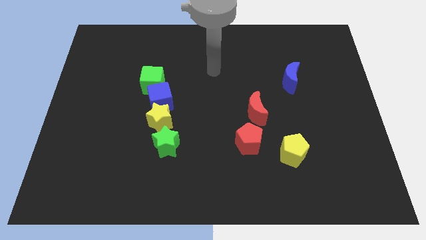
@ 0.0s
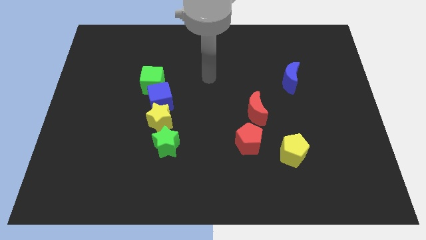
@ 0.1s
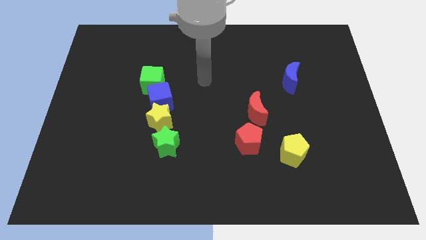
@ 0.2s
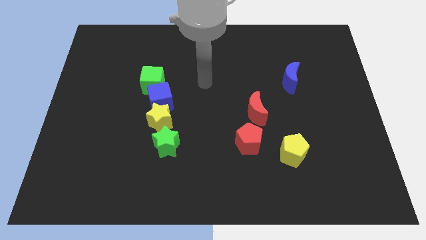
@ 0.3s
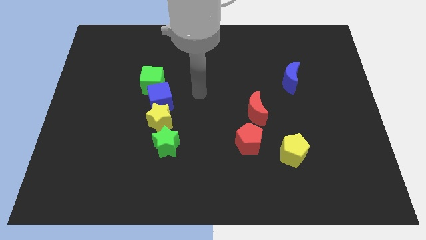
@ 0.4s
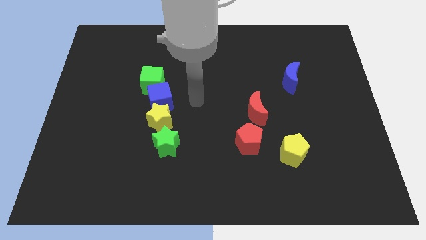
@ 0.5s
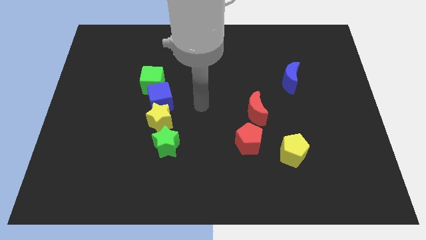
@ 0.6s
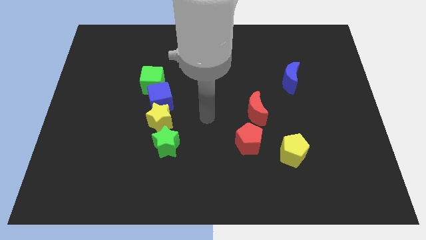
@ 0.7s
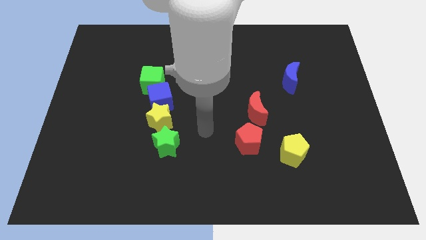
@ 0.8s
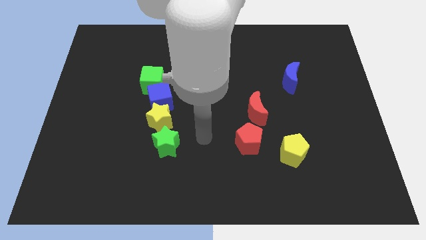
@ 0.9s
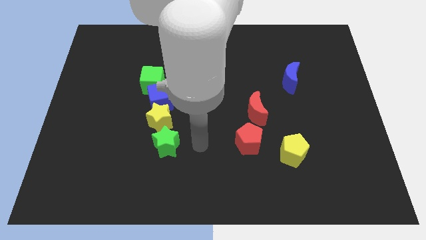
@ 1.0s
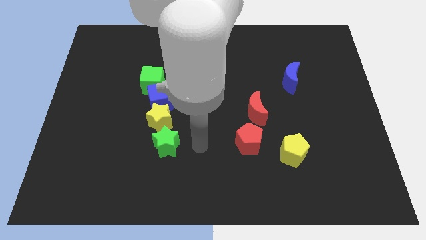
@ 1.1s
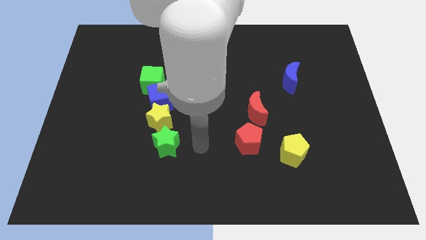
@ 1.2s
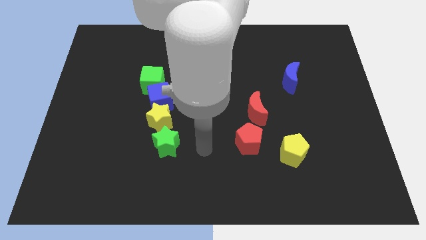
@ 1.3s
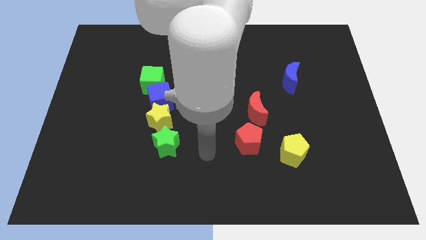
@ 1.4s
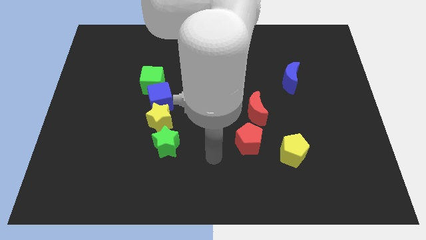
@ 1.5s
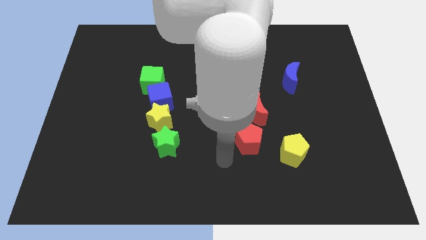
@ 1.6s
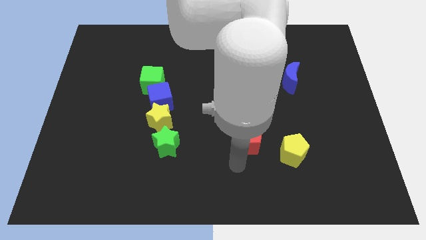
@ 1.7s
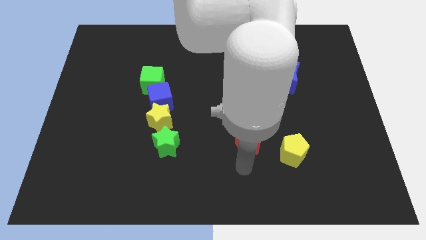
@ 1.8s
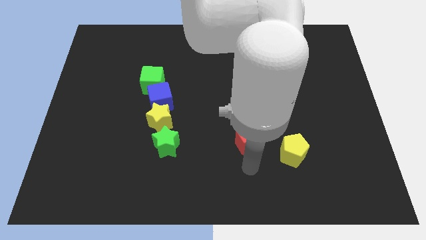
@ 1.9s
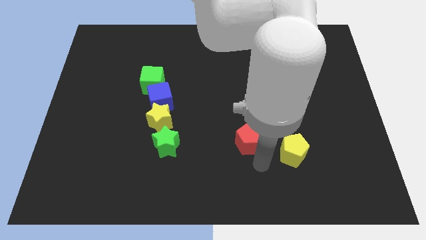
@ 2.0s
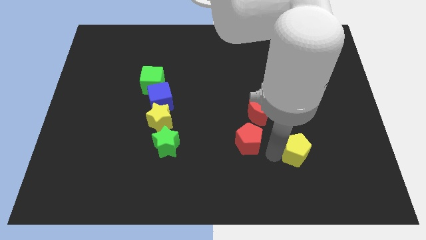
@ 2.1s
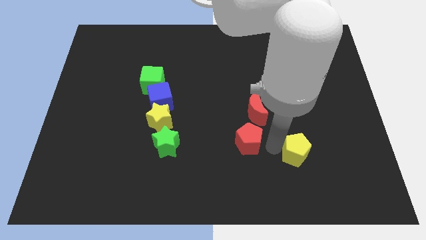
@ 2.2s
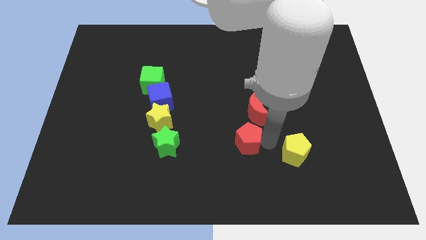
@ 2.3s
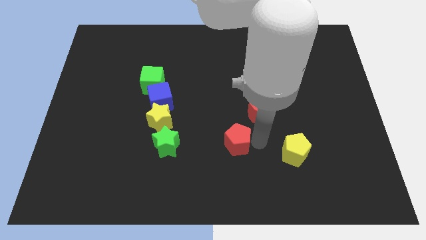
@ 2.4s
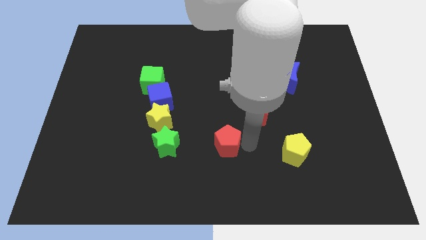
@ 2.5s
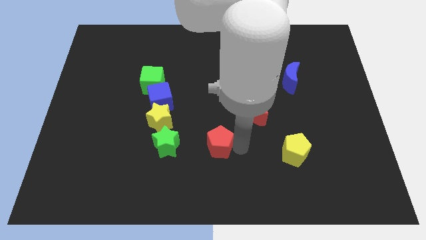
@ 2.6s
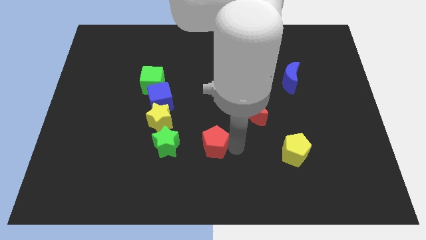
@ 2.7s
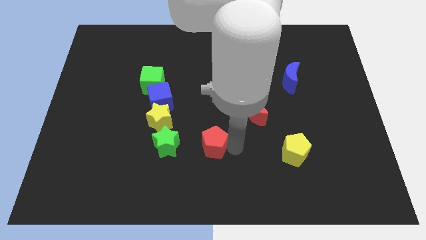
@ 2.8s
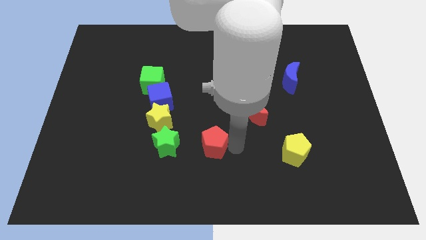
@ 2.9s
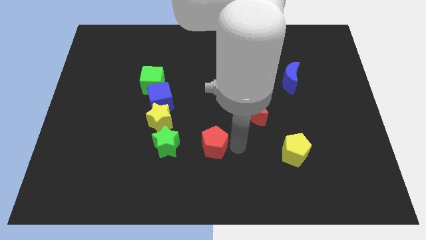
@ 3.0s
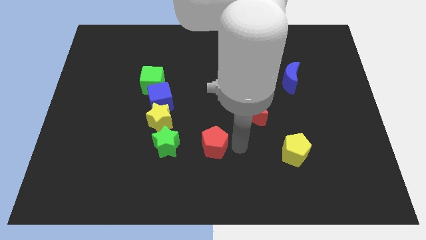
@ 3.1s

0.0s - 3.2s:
move red pentagon right beside the green star

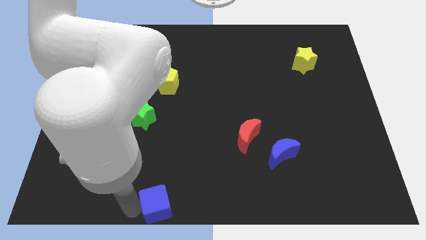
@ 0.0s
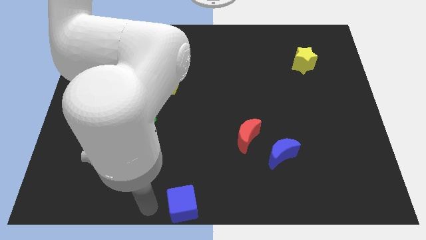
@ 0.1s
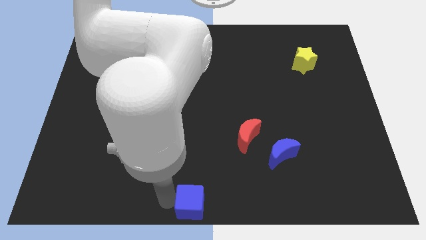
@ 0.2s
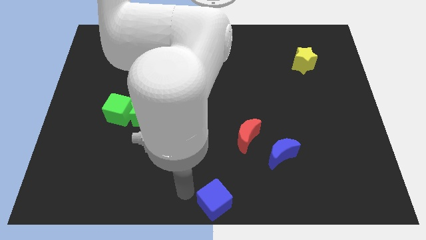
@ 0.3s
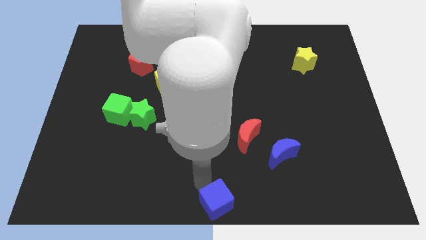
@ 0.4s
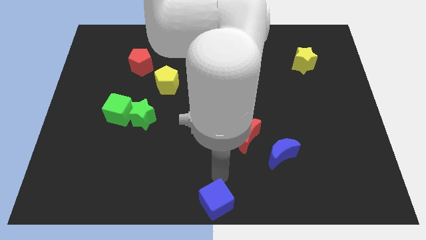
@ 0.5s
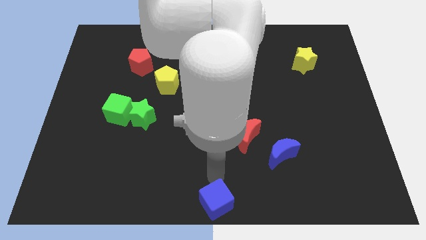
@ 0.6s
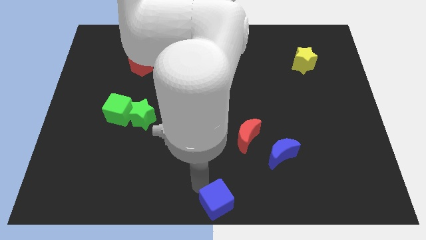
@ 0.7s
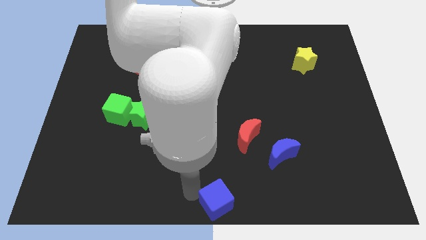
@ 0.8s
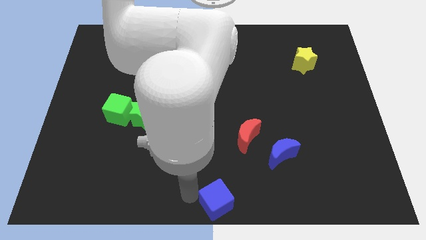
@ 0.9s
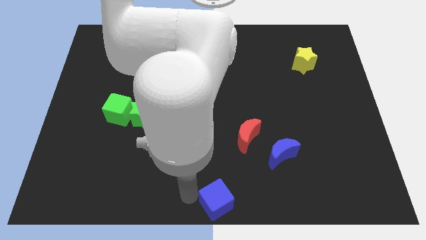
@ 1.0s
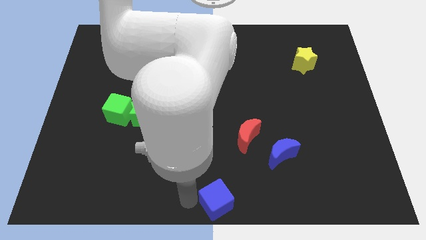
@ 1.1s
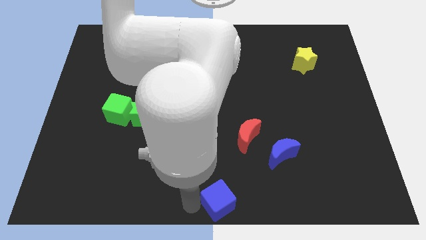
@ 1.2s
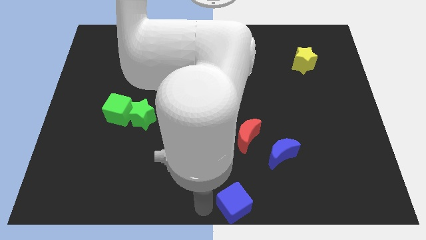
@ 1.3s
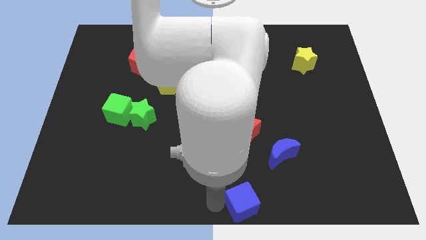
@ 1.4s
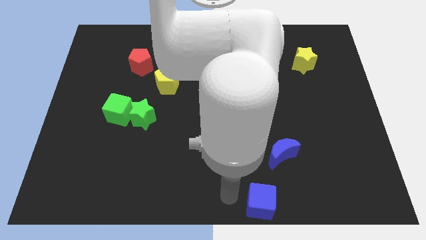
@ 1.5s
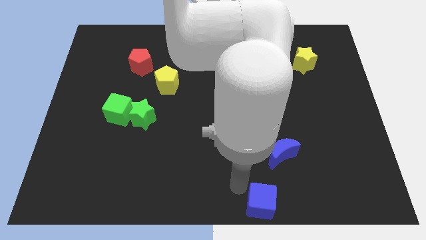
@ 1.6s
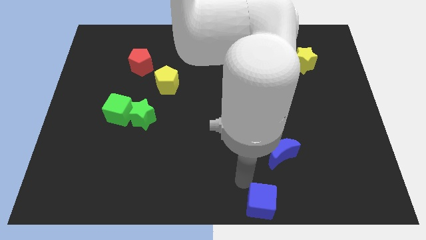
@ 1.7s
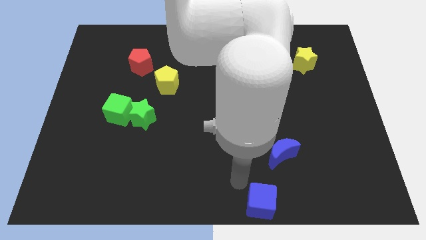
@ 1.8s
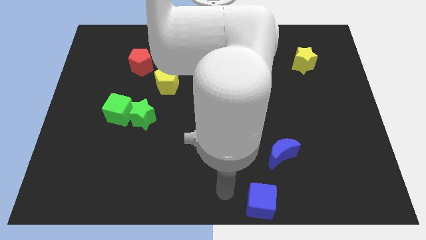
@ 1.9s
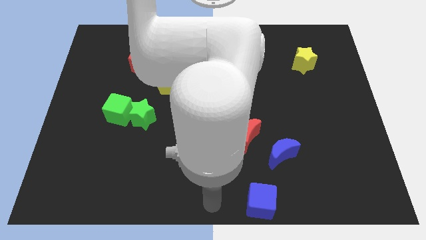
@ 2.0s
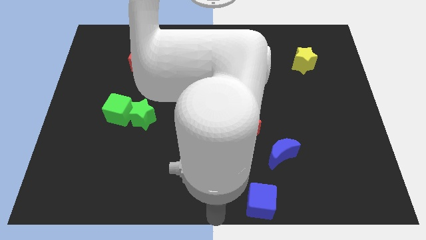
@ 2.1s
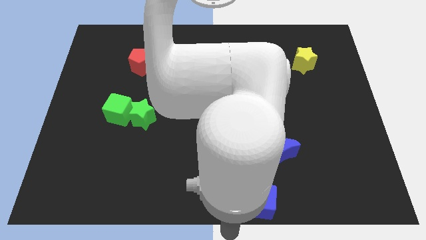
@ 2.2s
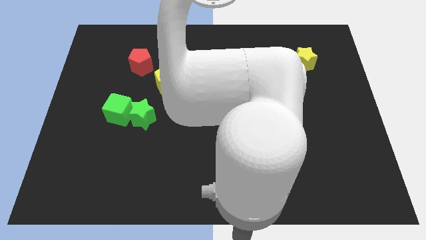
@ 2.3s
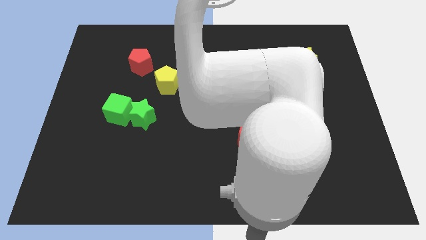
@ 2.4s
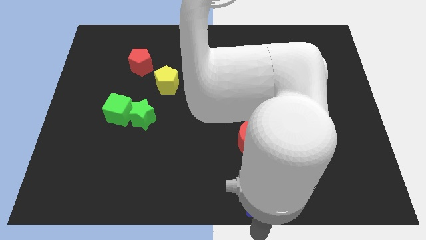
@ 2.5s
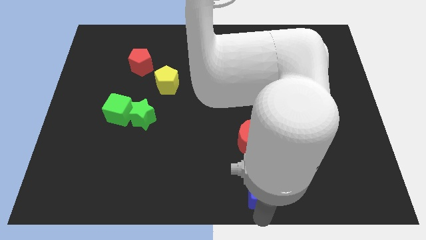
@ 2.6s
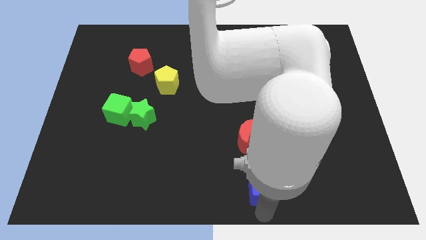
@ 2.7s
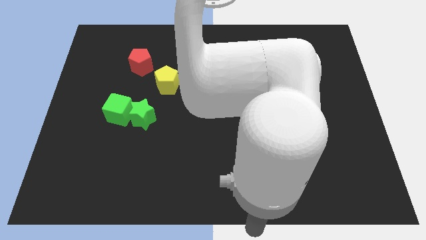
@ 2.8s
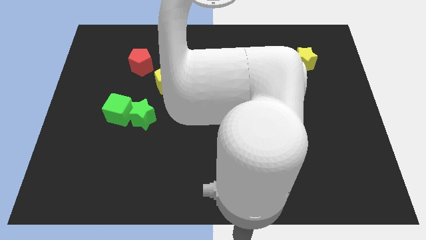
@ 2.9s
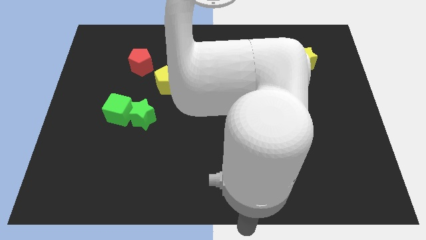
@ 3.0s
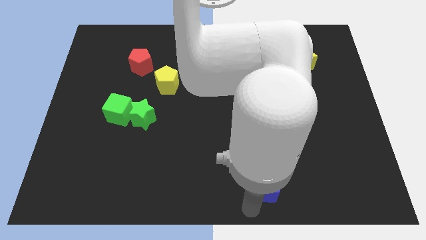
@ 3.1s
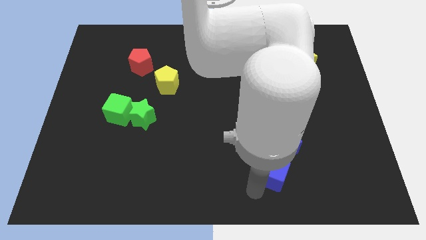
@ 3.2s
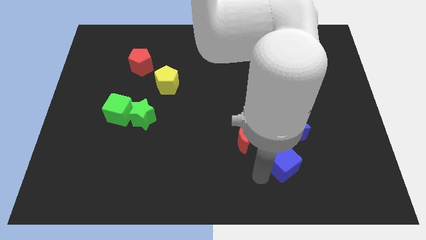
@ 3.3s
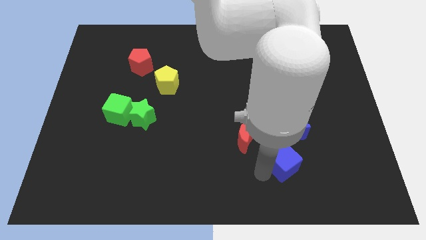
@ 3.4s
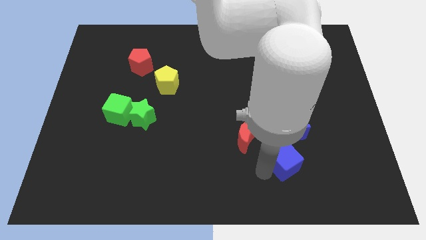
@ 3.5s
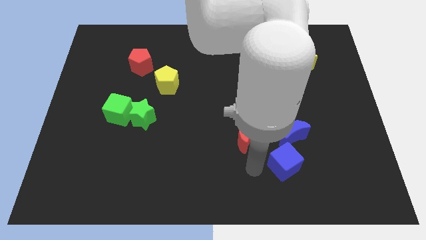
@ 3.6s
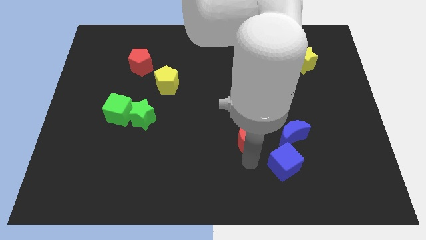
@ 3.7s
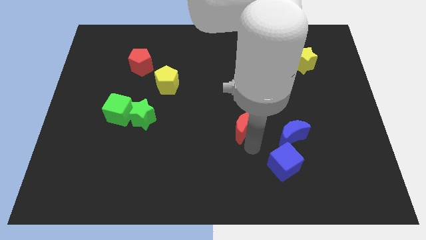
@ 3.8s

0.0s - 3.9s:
push the blue cube to the bottom left side of the blue moon

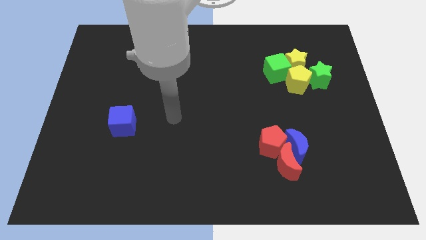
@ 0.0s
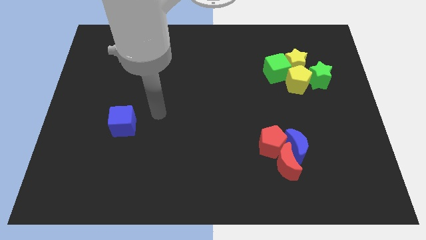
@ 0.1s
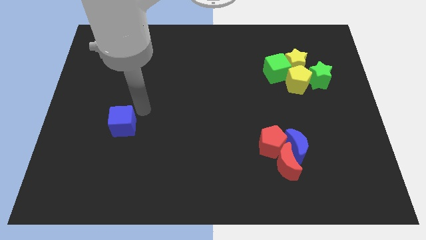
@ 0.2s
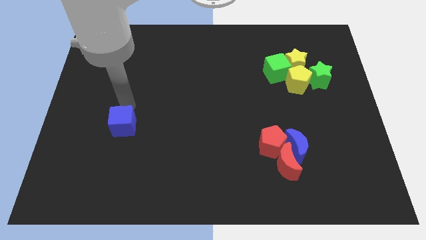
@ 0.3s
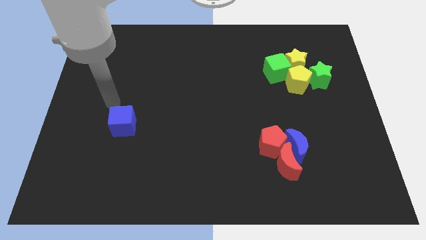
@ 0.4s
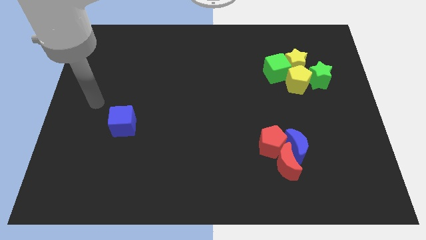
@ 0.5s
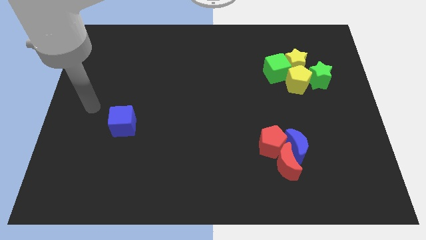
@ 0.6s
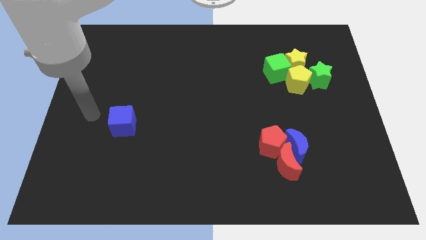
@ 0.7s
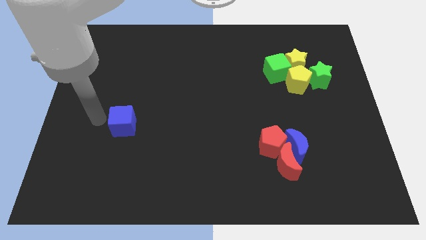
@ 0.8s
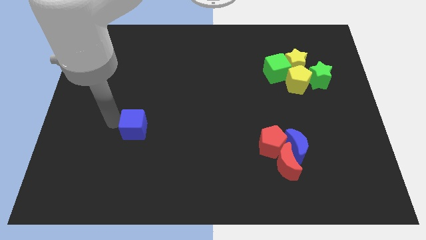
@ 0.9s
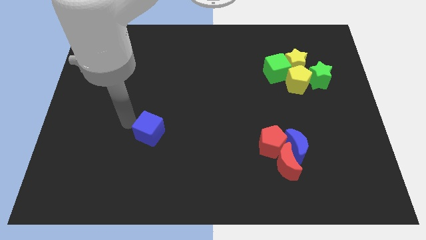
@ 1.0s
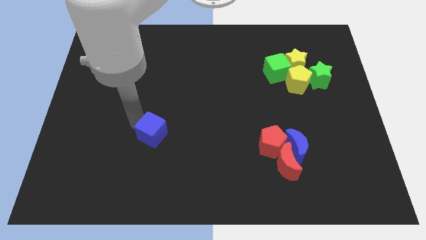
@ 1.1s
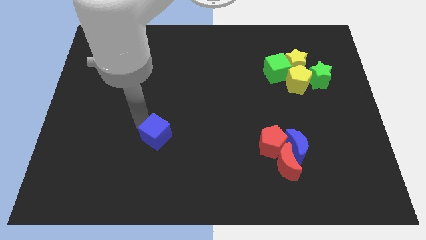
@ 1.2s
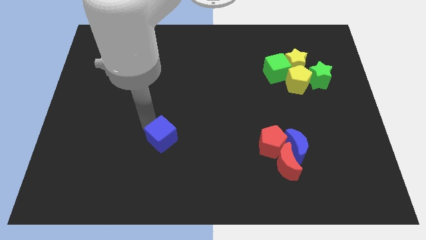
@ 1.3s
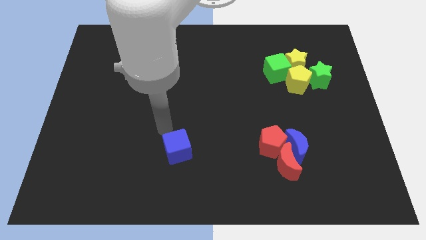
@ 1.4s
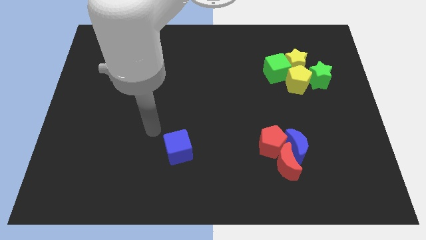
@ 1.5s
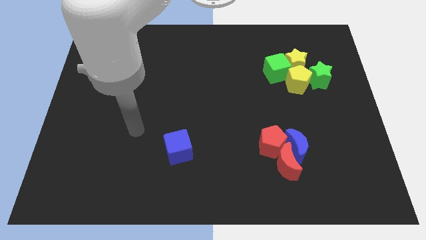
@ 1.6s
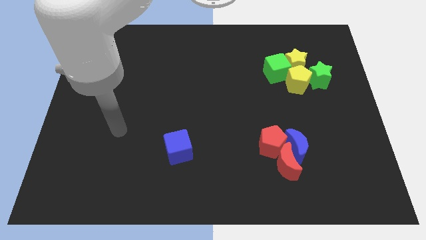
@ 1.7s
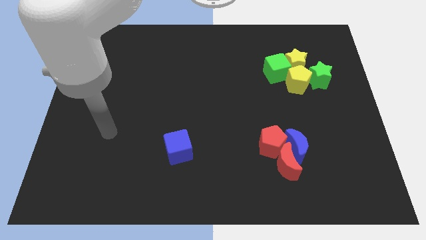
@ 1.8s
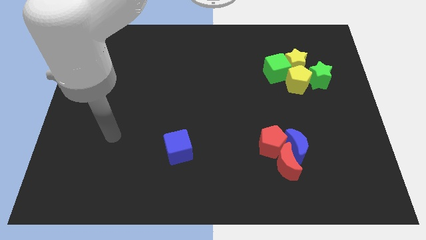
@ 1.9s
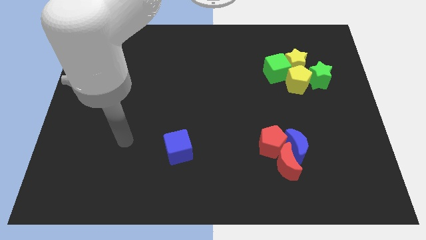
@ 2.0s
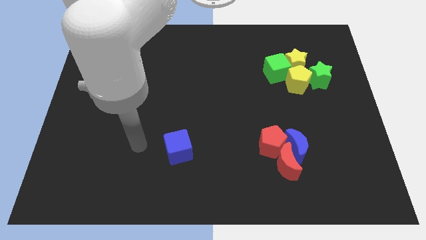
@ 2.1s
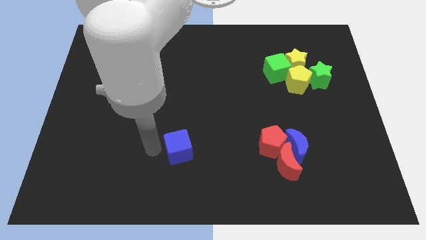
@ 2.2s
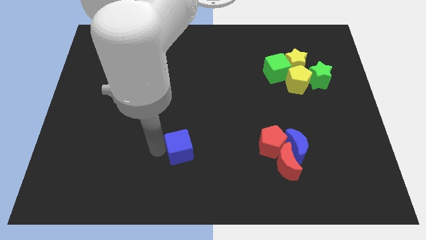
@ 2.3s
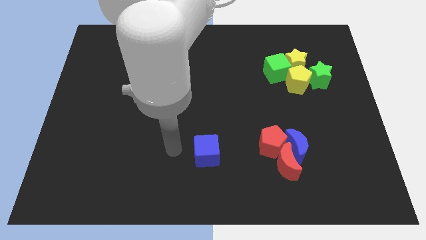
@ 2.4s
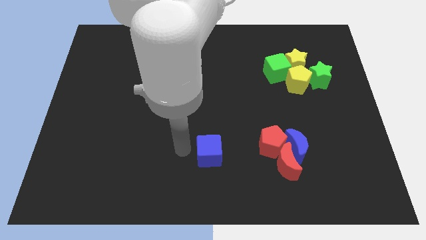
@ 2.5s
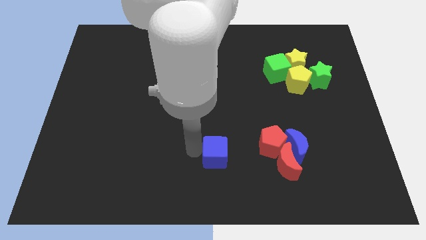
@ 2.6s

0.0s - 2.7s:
move the blue cube to the left of the red blocks
